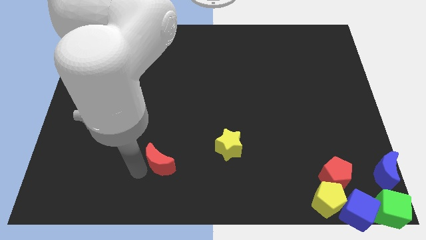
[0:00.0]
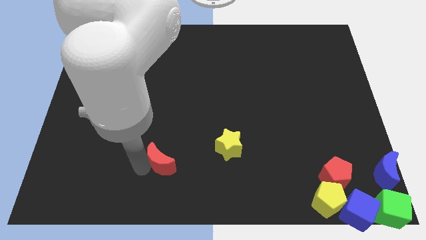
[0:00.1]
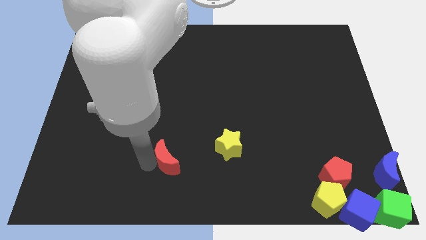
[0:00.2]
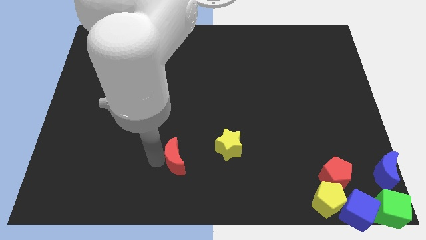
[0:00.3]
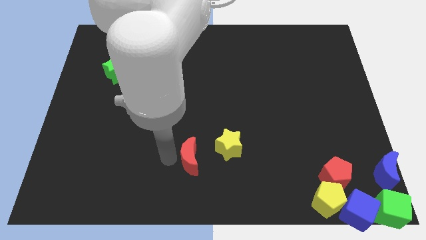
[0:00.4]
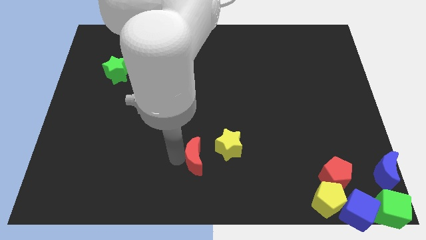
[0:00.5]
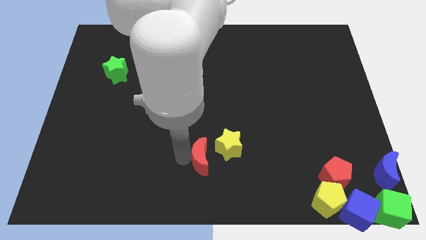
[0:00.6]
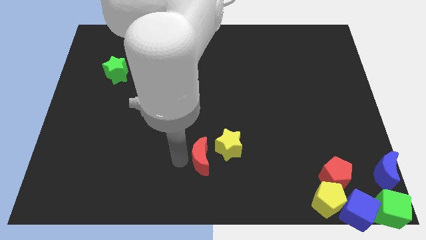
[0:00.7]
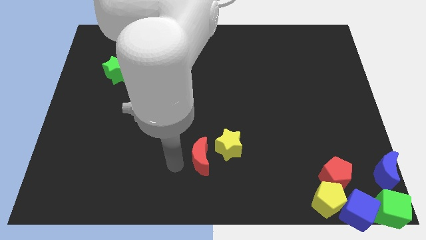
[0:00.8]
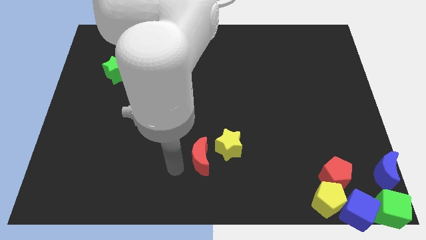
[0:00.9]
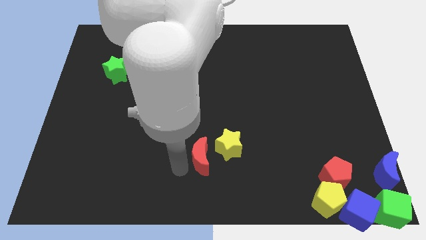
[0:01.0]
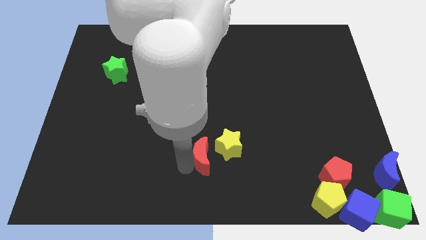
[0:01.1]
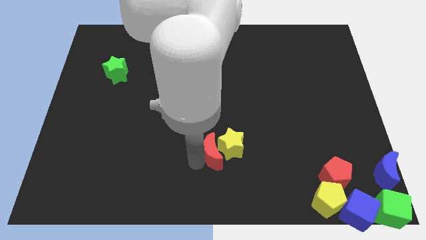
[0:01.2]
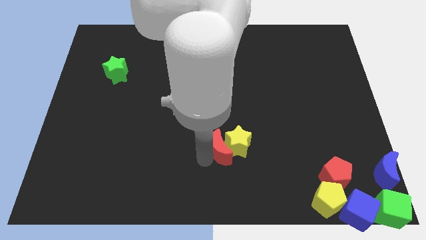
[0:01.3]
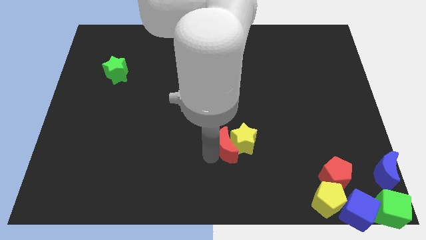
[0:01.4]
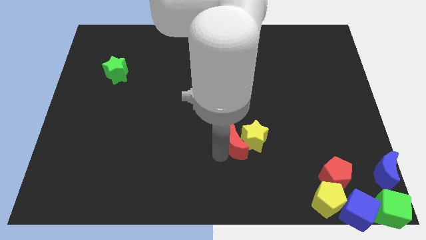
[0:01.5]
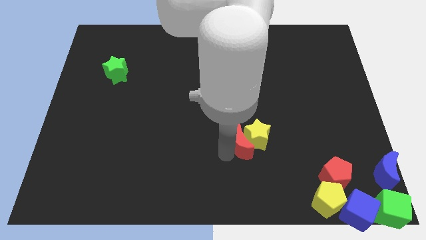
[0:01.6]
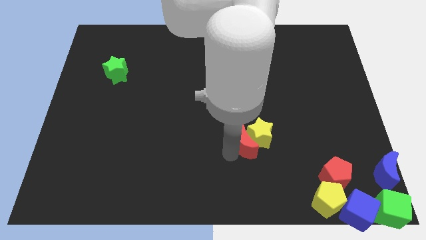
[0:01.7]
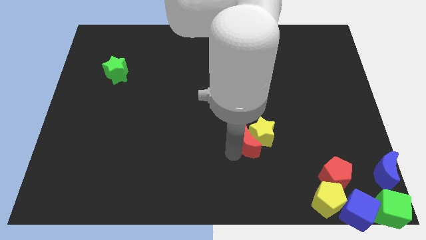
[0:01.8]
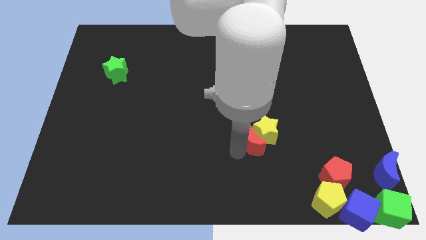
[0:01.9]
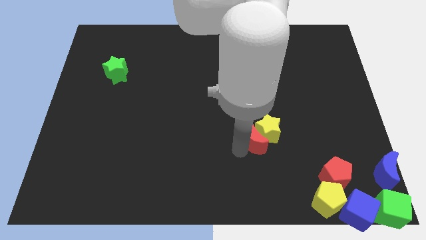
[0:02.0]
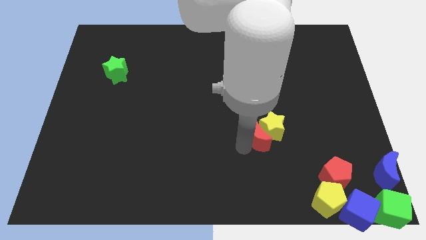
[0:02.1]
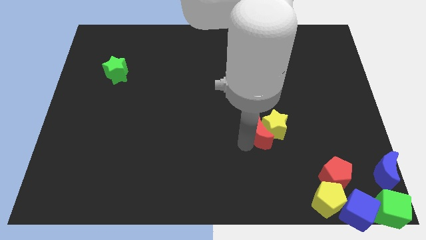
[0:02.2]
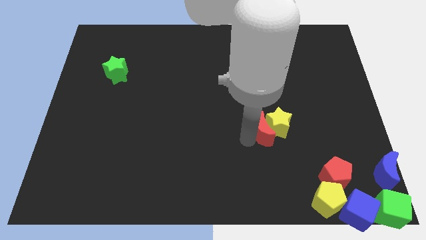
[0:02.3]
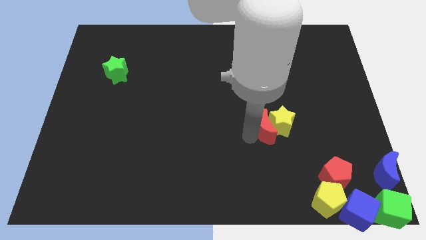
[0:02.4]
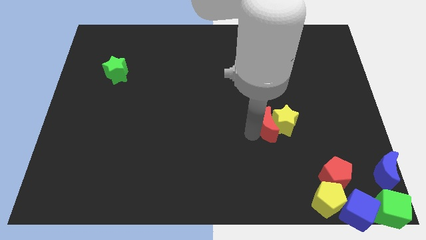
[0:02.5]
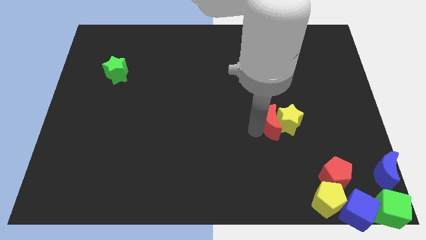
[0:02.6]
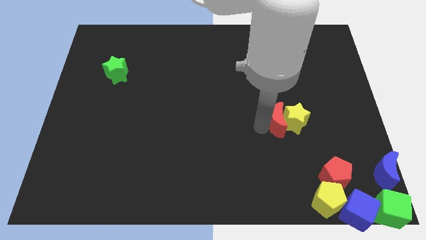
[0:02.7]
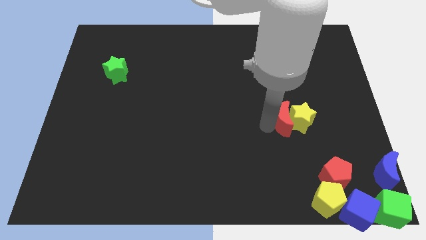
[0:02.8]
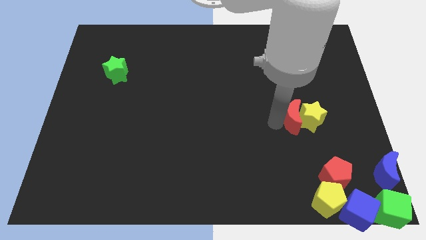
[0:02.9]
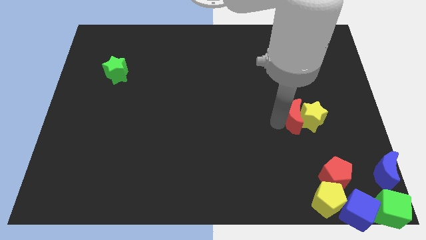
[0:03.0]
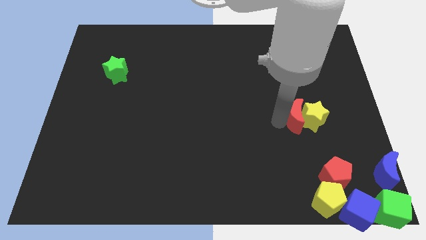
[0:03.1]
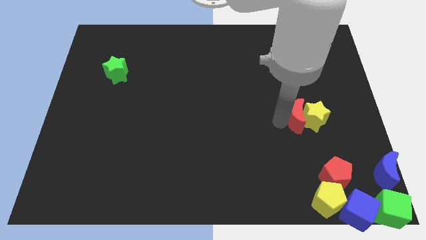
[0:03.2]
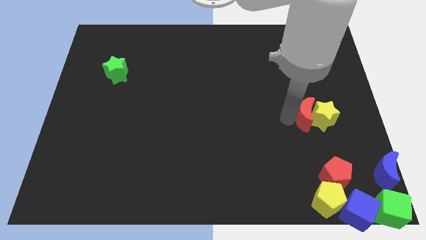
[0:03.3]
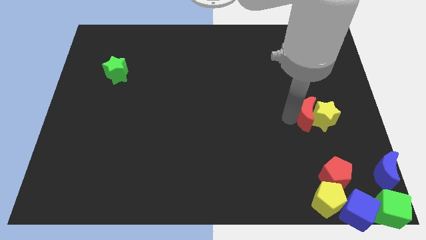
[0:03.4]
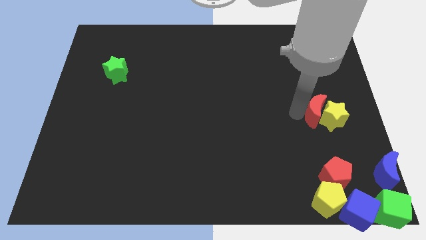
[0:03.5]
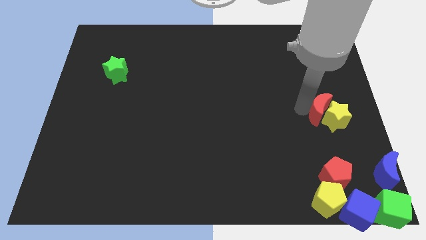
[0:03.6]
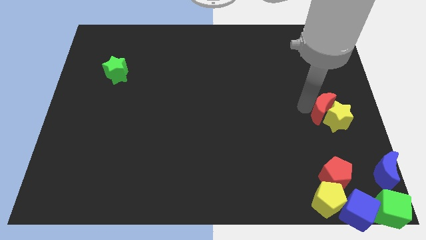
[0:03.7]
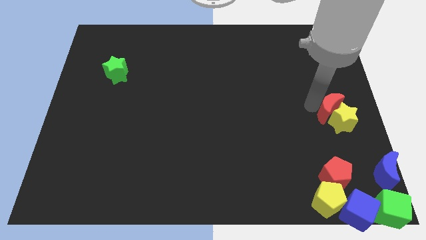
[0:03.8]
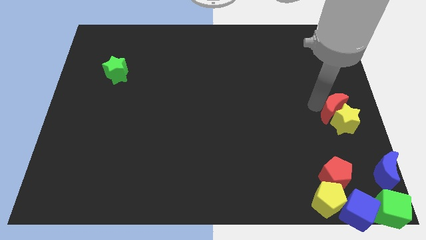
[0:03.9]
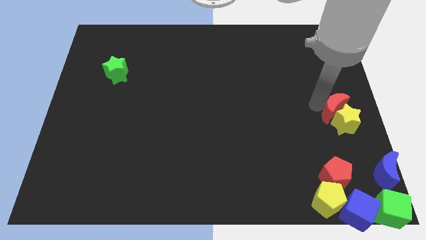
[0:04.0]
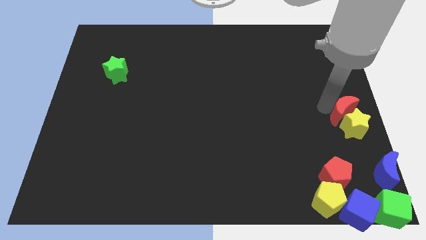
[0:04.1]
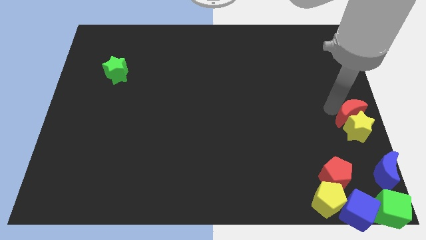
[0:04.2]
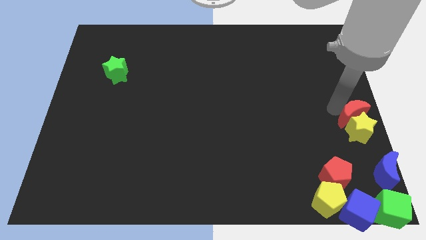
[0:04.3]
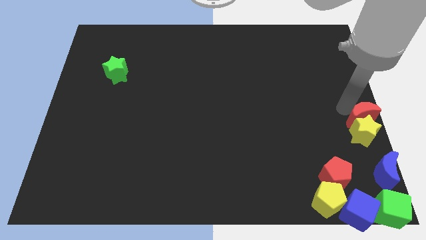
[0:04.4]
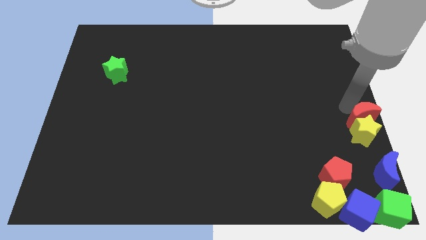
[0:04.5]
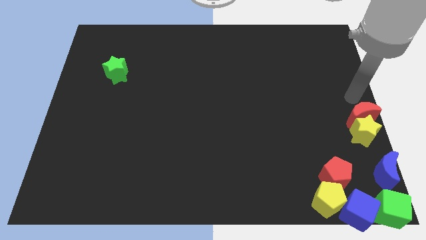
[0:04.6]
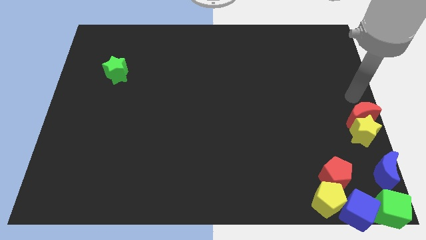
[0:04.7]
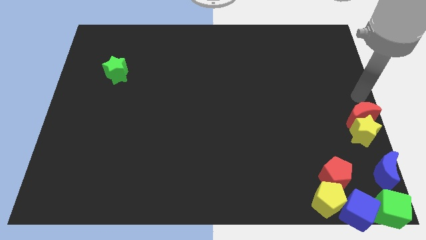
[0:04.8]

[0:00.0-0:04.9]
place the red crescent along with yellow star above the blue crescent

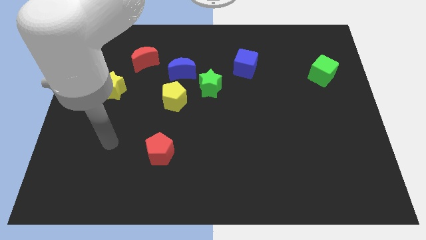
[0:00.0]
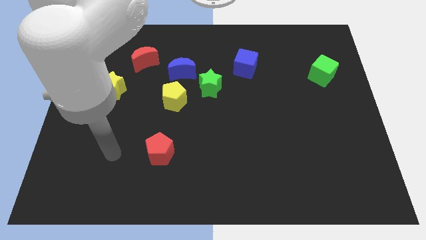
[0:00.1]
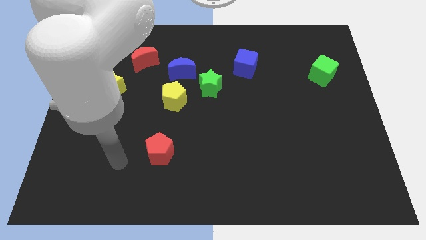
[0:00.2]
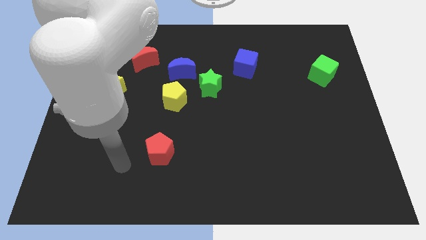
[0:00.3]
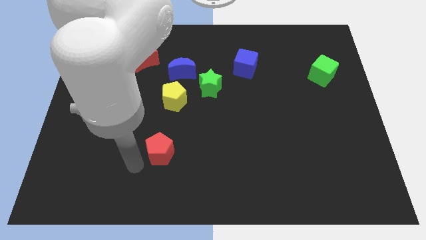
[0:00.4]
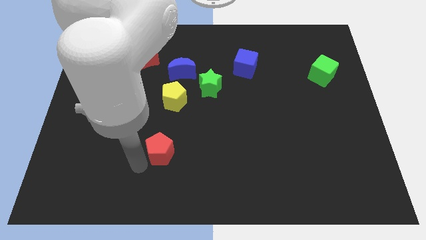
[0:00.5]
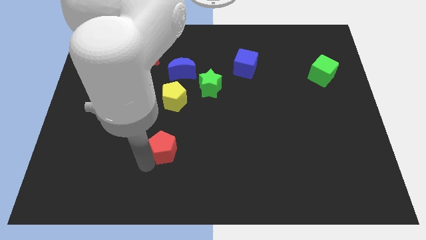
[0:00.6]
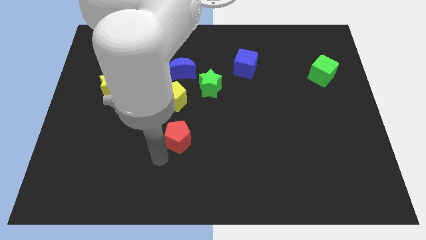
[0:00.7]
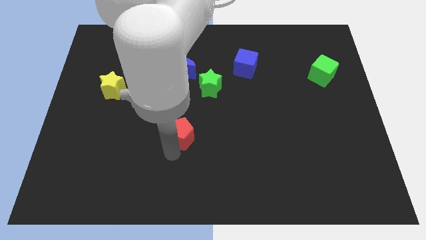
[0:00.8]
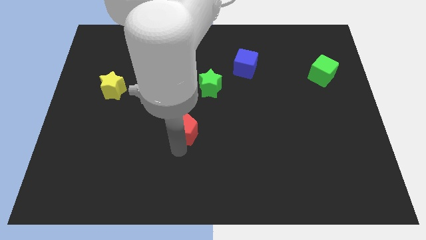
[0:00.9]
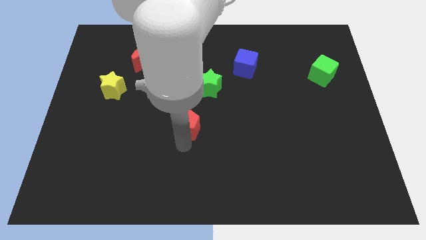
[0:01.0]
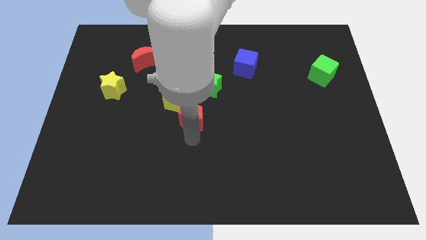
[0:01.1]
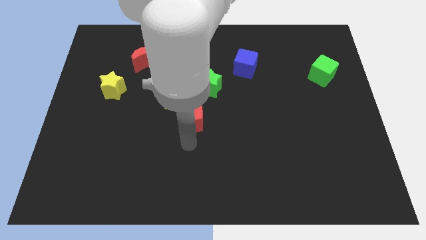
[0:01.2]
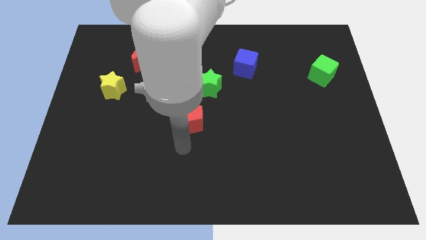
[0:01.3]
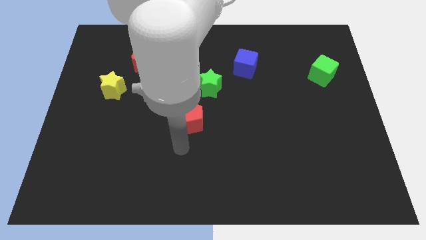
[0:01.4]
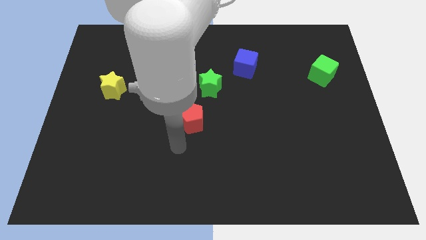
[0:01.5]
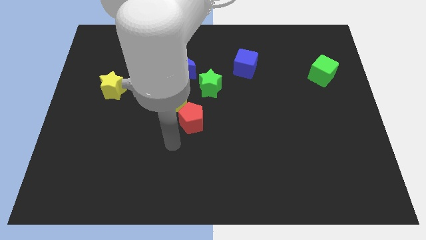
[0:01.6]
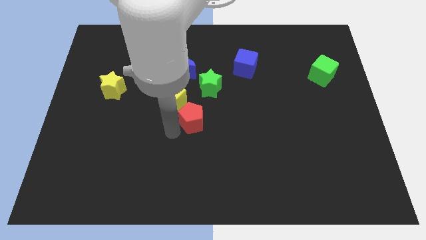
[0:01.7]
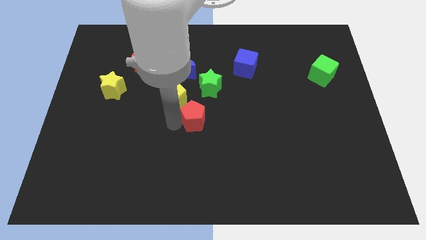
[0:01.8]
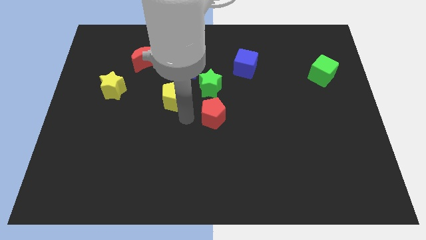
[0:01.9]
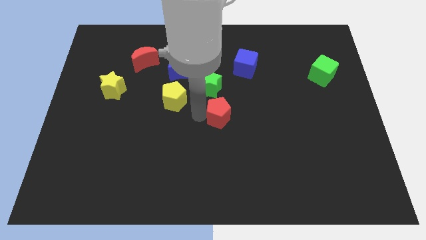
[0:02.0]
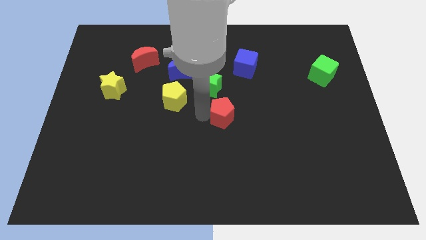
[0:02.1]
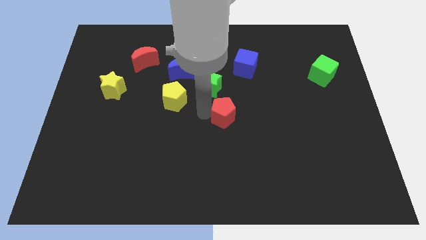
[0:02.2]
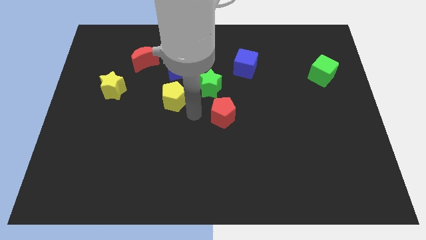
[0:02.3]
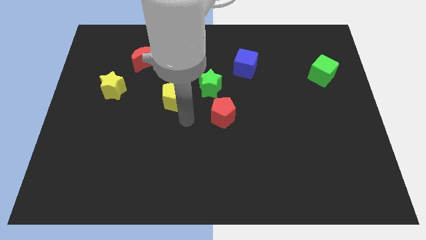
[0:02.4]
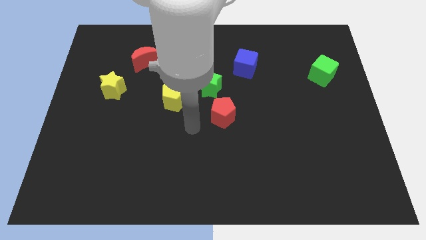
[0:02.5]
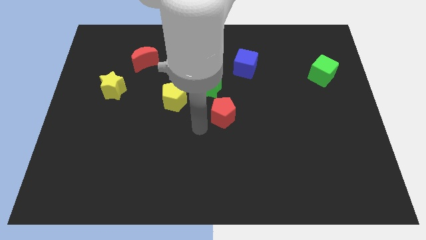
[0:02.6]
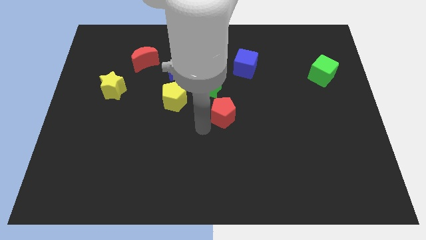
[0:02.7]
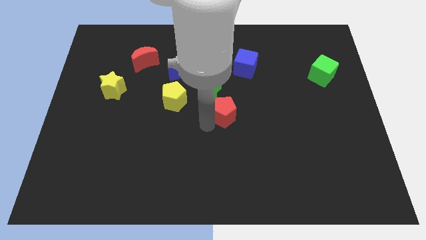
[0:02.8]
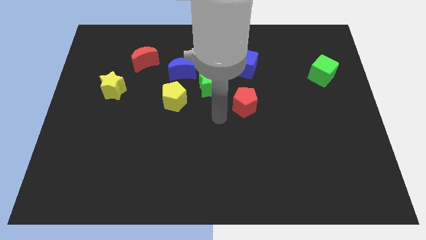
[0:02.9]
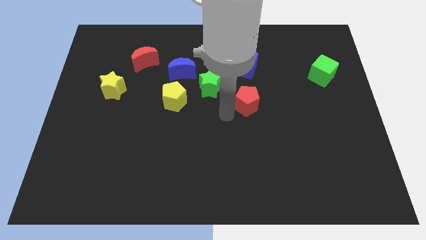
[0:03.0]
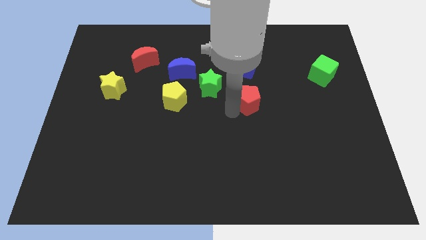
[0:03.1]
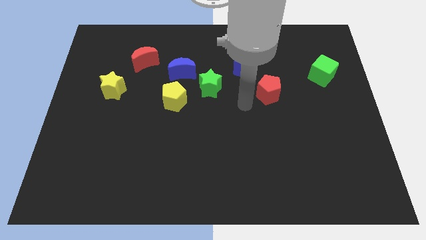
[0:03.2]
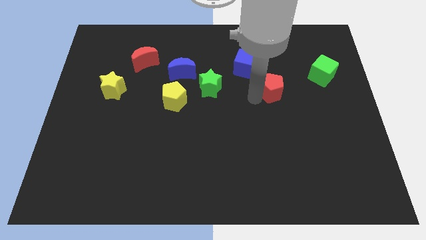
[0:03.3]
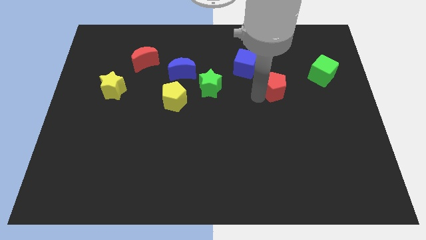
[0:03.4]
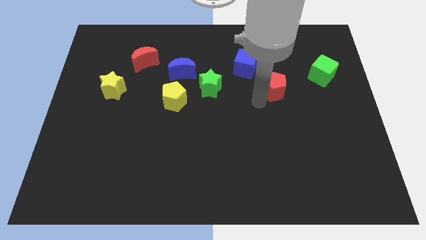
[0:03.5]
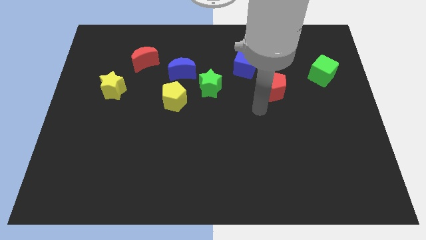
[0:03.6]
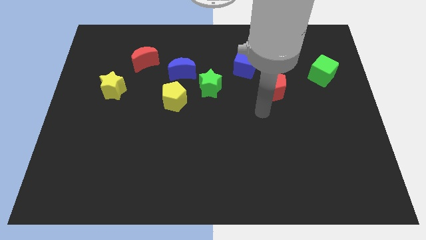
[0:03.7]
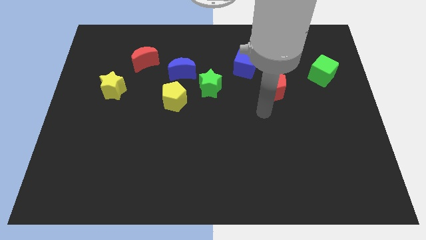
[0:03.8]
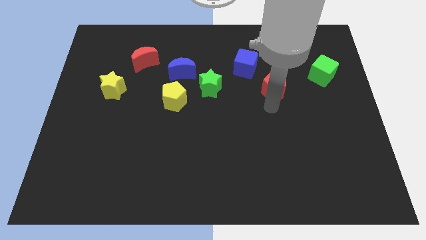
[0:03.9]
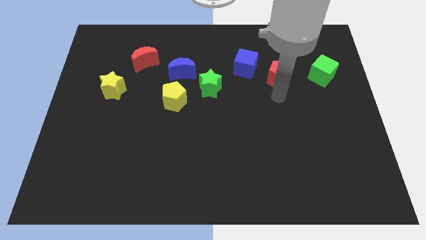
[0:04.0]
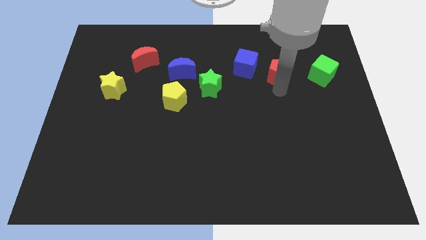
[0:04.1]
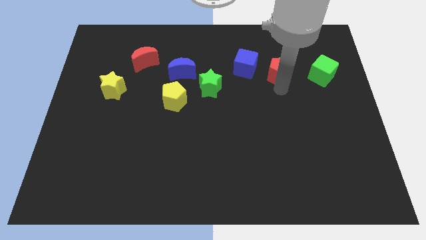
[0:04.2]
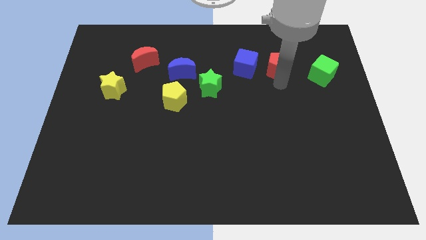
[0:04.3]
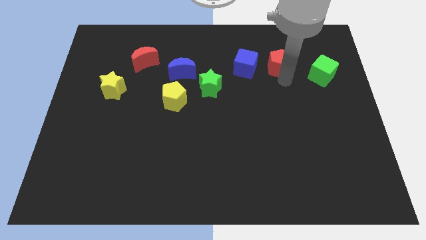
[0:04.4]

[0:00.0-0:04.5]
move the red pentagon between green and blue cubes
